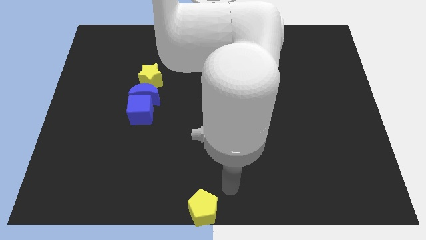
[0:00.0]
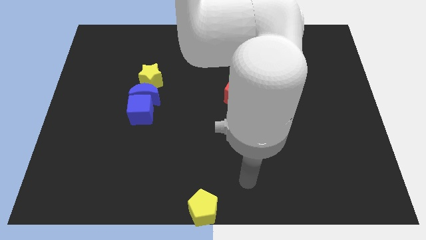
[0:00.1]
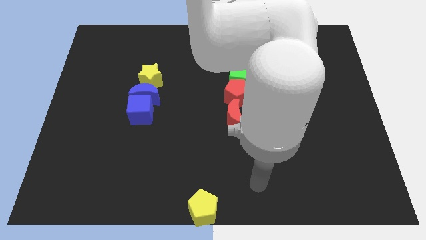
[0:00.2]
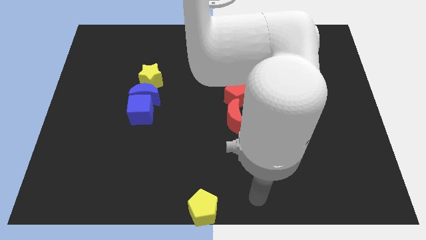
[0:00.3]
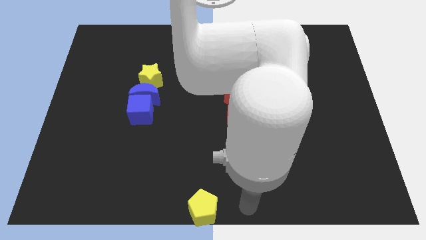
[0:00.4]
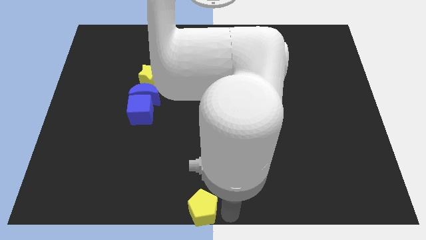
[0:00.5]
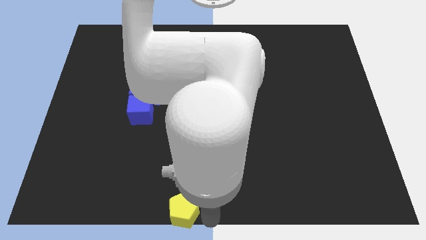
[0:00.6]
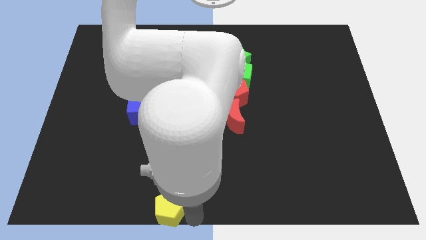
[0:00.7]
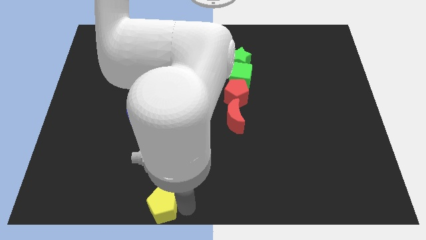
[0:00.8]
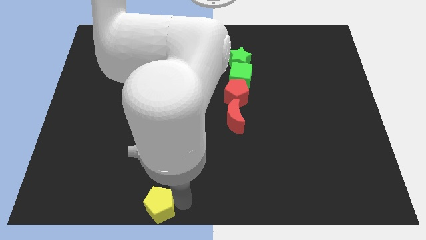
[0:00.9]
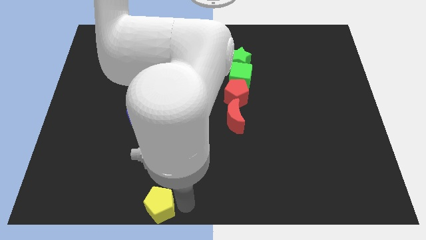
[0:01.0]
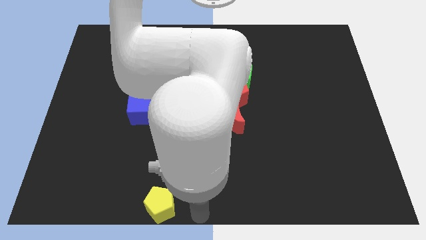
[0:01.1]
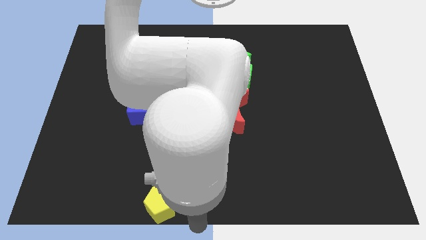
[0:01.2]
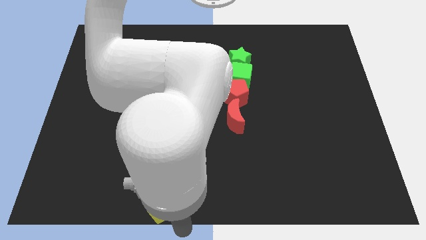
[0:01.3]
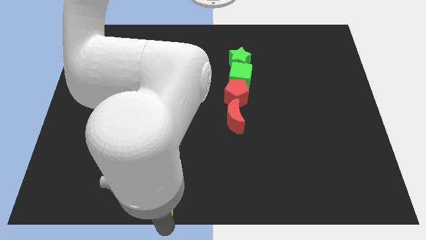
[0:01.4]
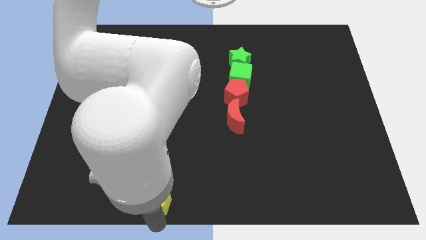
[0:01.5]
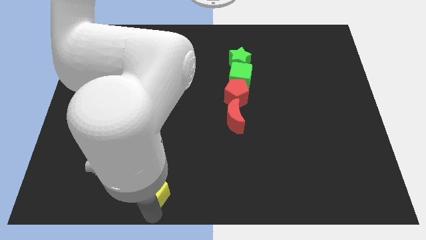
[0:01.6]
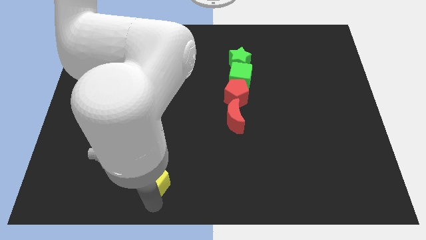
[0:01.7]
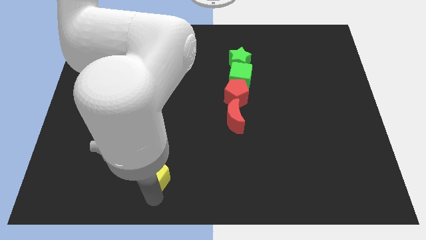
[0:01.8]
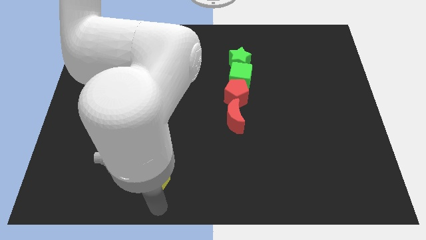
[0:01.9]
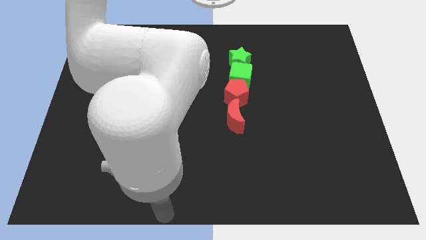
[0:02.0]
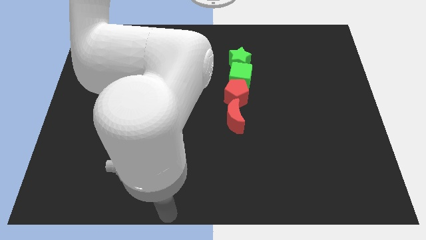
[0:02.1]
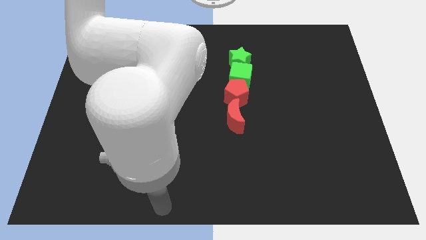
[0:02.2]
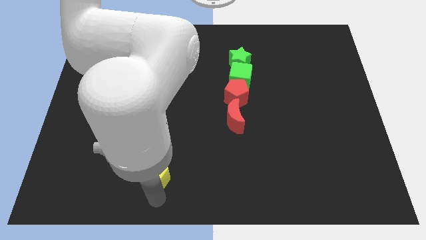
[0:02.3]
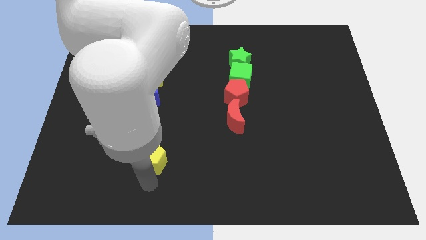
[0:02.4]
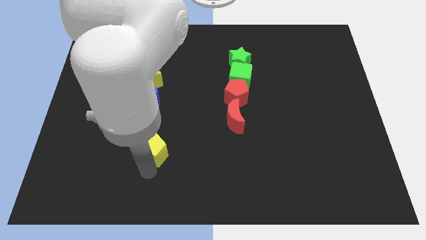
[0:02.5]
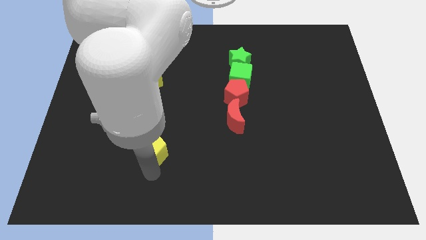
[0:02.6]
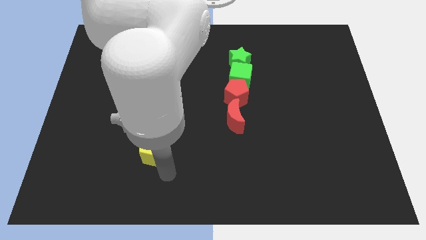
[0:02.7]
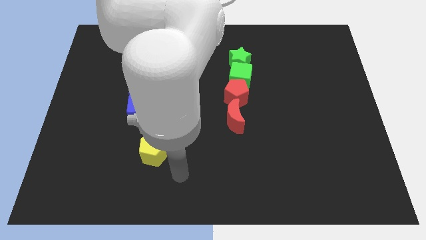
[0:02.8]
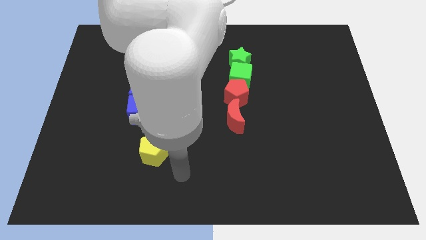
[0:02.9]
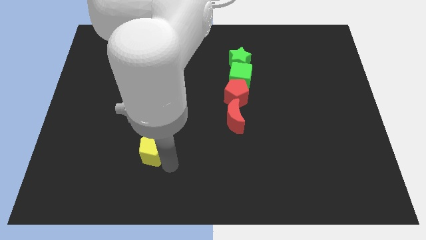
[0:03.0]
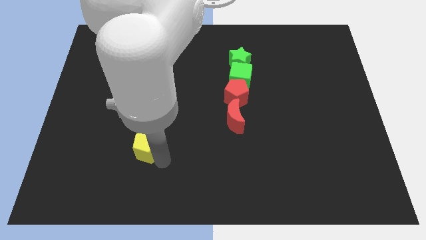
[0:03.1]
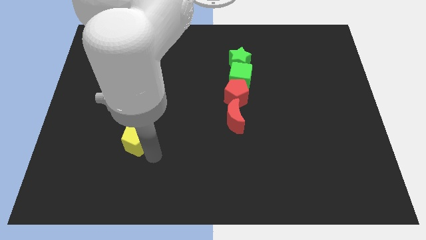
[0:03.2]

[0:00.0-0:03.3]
slide the yellow pentagon towards the blue cube

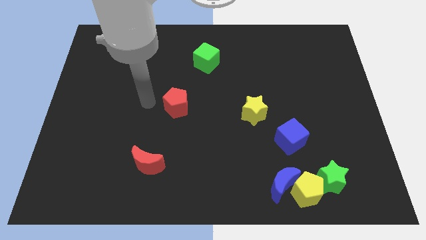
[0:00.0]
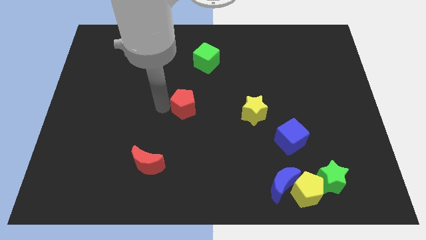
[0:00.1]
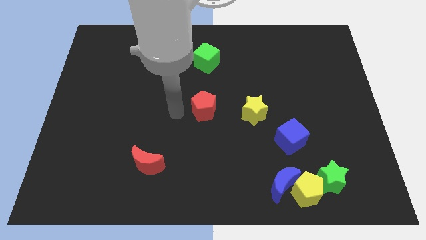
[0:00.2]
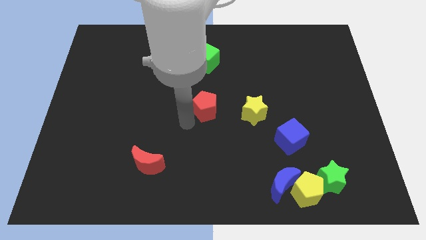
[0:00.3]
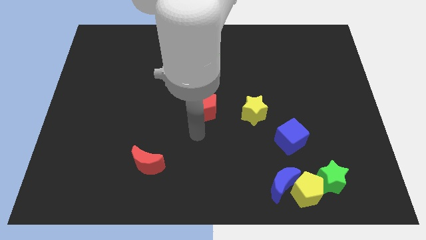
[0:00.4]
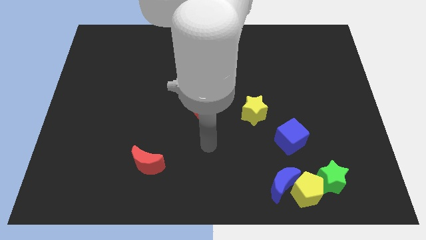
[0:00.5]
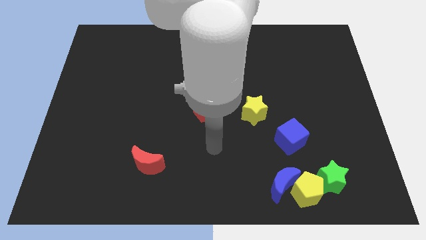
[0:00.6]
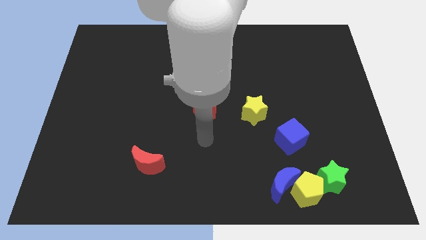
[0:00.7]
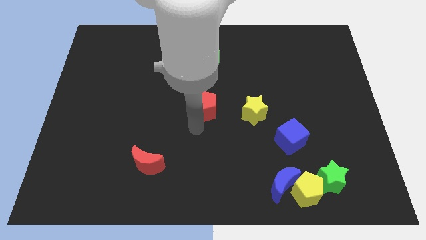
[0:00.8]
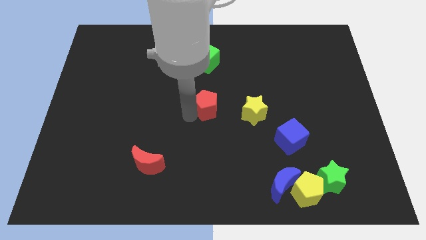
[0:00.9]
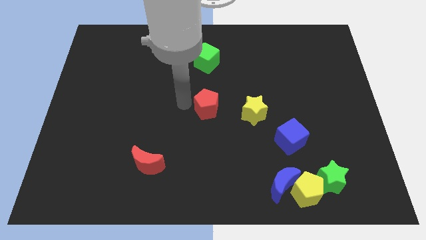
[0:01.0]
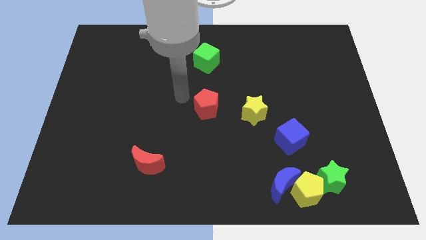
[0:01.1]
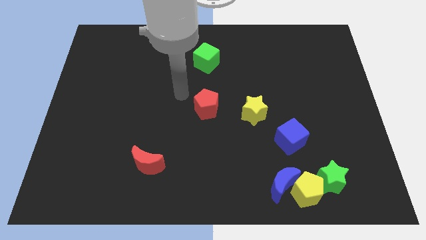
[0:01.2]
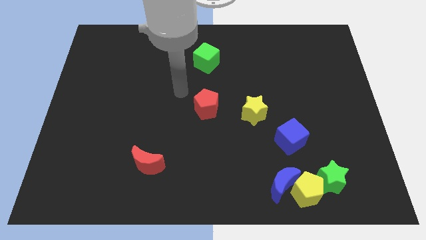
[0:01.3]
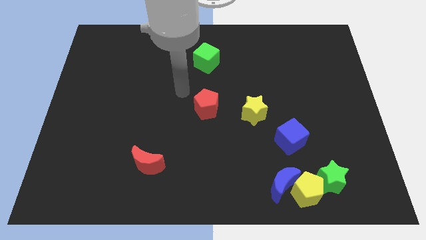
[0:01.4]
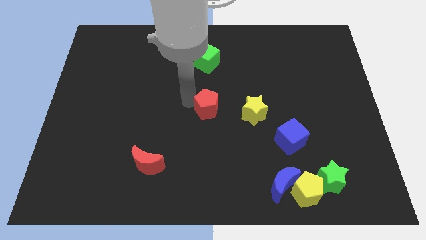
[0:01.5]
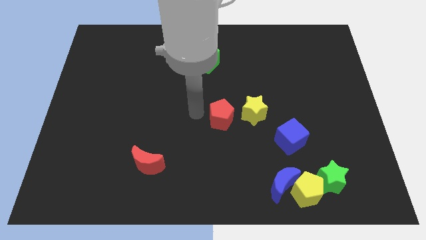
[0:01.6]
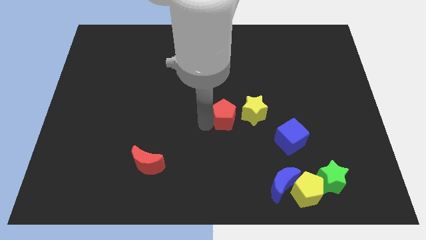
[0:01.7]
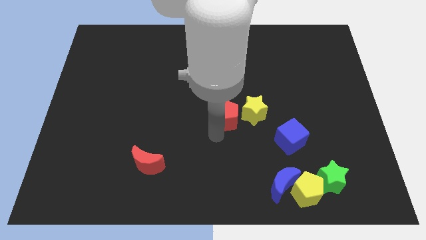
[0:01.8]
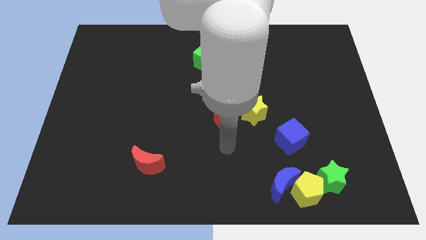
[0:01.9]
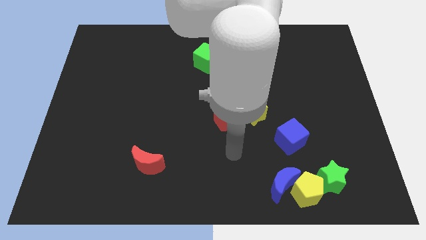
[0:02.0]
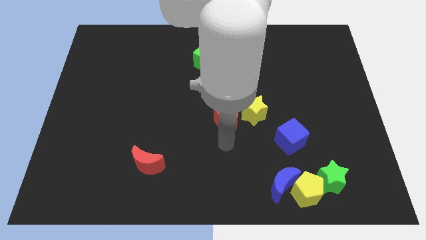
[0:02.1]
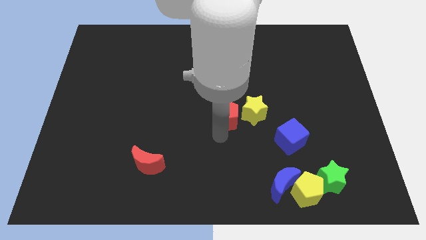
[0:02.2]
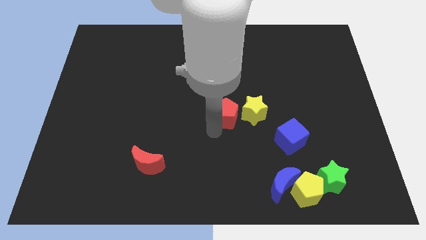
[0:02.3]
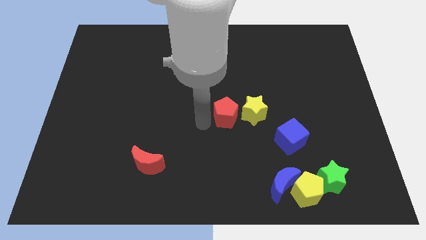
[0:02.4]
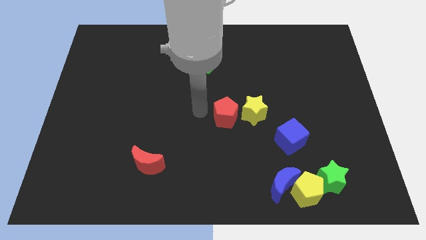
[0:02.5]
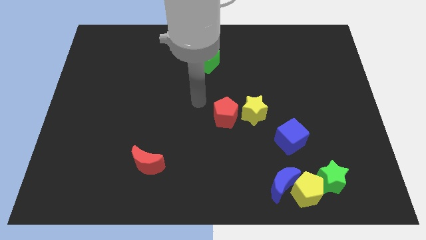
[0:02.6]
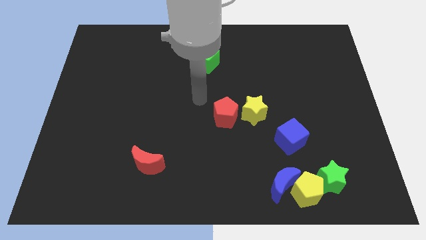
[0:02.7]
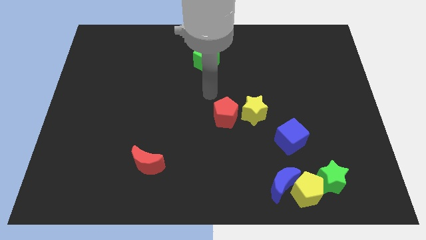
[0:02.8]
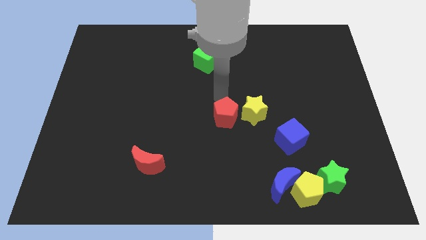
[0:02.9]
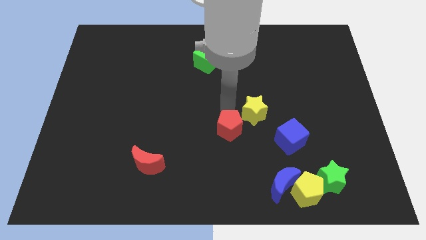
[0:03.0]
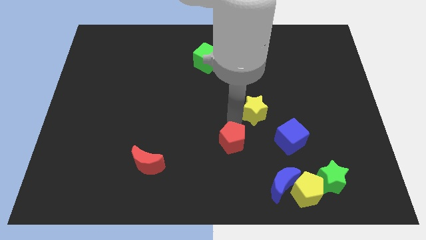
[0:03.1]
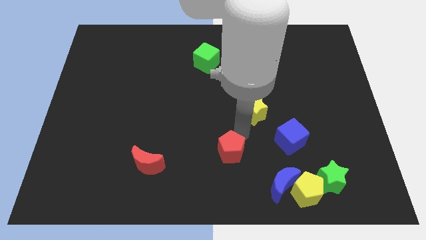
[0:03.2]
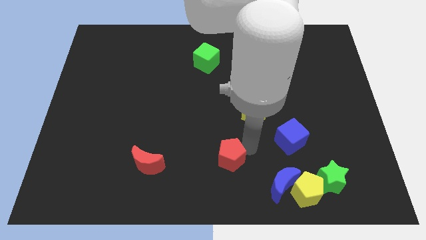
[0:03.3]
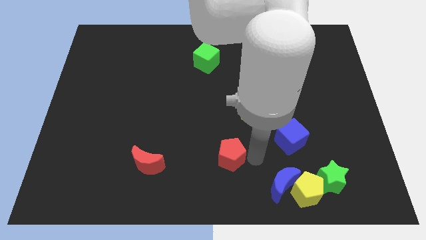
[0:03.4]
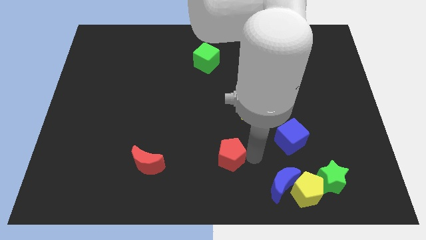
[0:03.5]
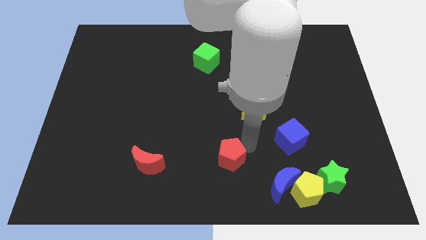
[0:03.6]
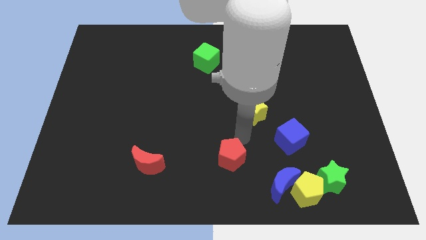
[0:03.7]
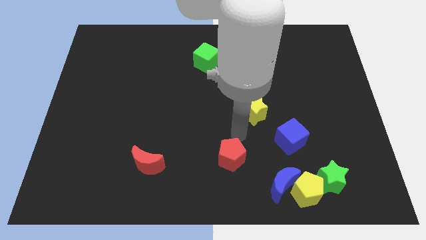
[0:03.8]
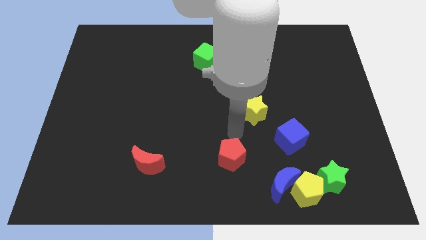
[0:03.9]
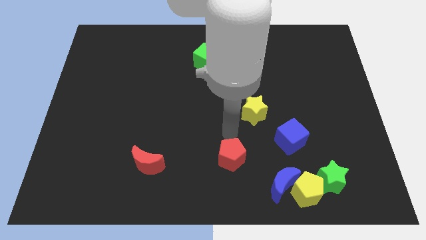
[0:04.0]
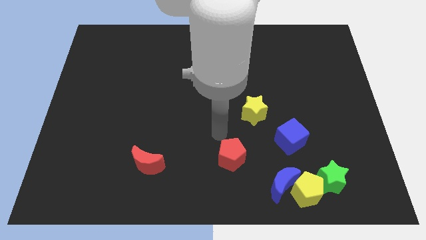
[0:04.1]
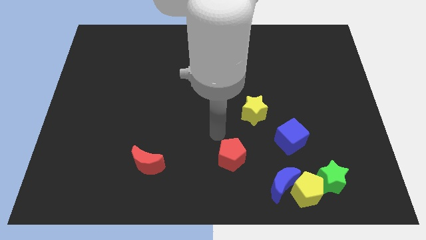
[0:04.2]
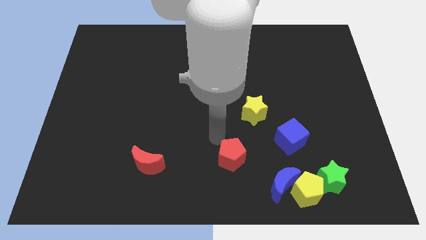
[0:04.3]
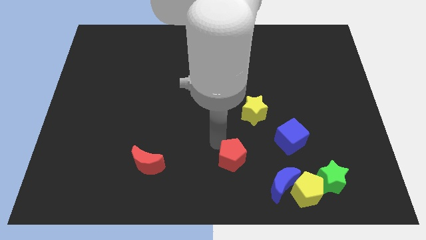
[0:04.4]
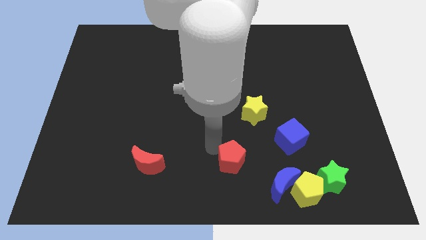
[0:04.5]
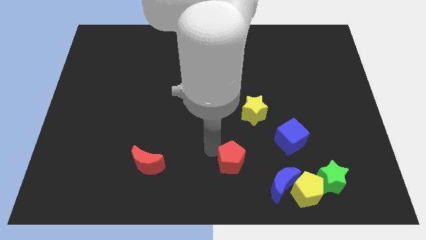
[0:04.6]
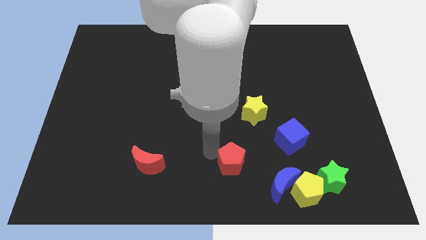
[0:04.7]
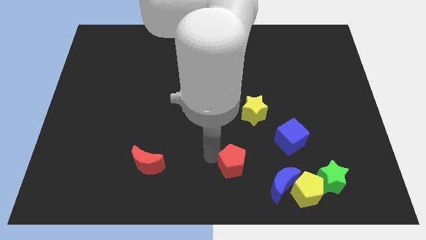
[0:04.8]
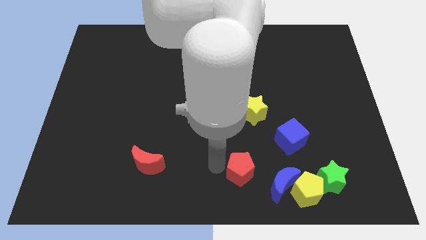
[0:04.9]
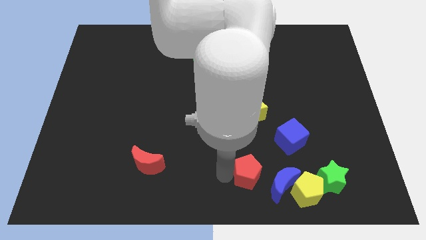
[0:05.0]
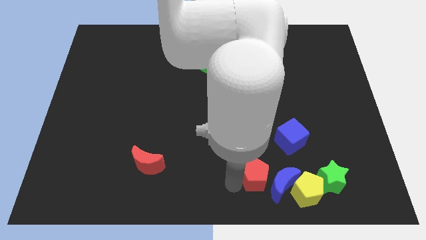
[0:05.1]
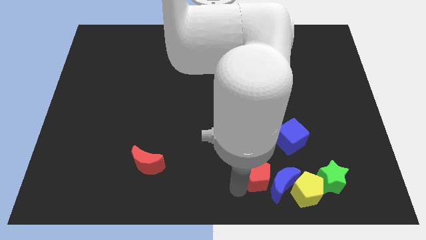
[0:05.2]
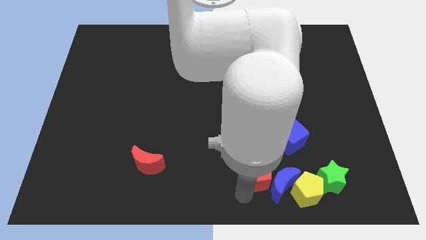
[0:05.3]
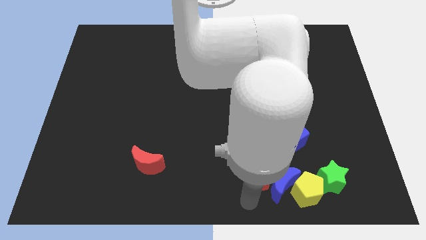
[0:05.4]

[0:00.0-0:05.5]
place the red pentagon beside the blue moon
